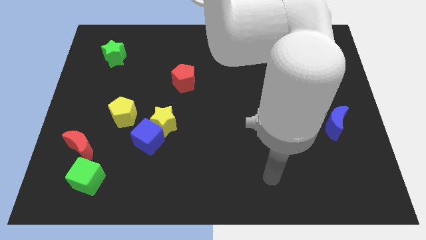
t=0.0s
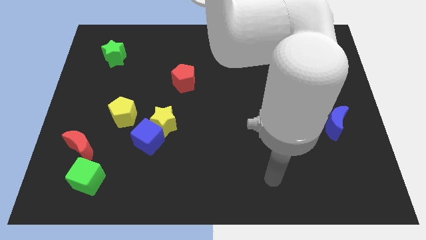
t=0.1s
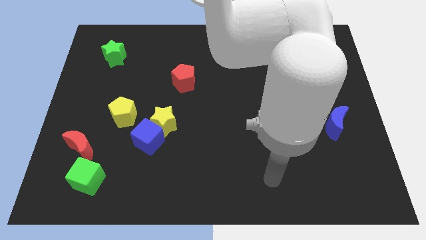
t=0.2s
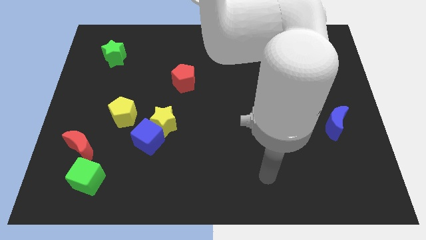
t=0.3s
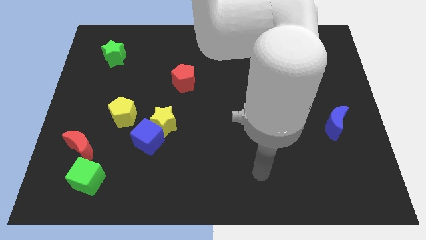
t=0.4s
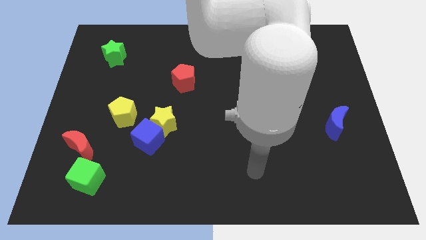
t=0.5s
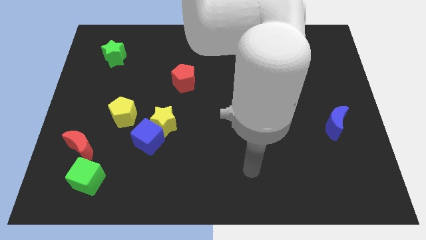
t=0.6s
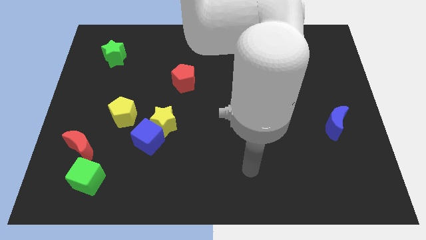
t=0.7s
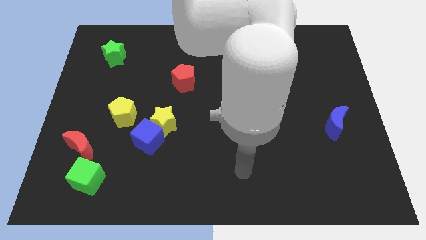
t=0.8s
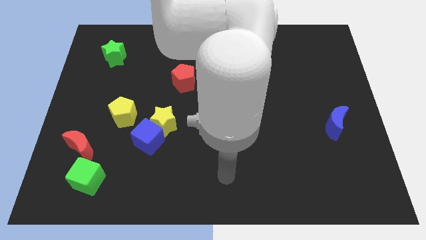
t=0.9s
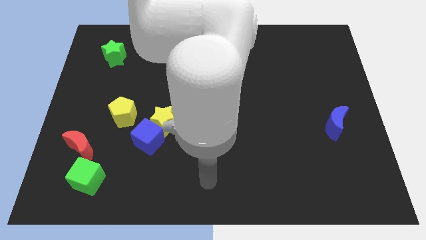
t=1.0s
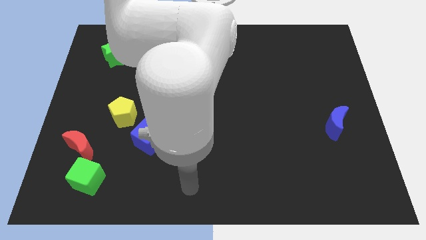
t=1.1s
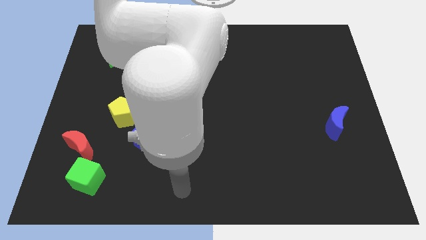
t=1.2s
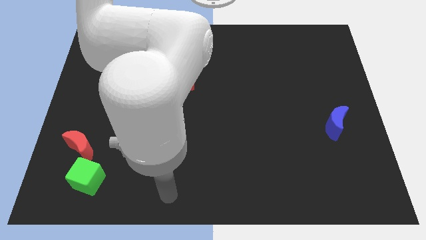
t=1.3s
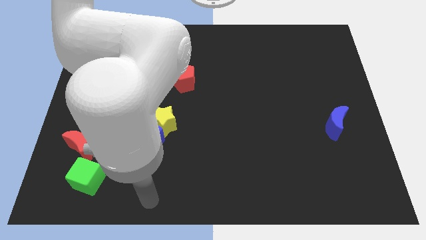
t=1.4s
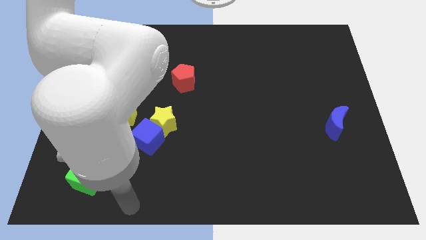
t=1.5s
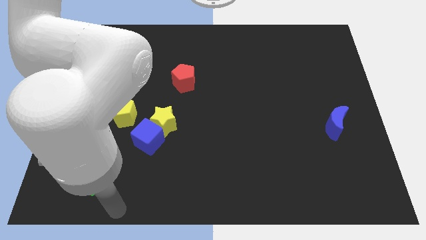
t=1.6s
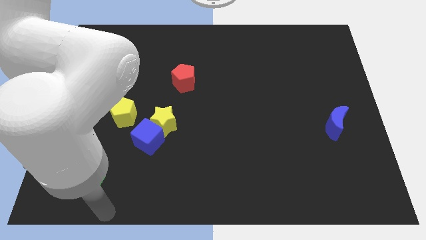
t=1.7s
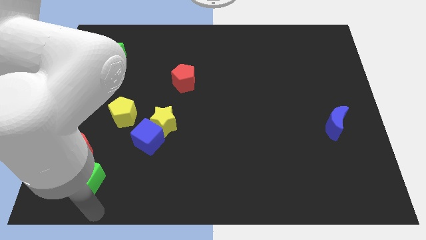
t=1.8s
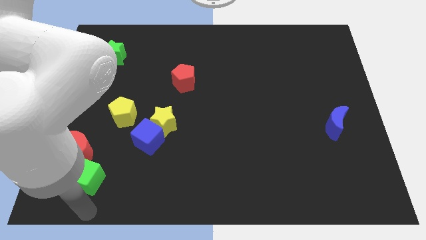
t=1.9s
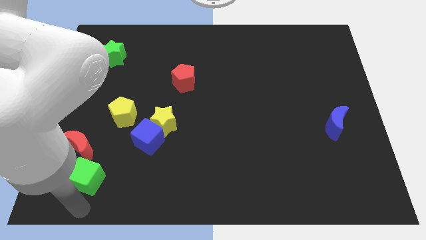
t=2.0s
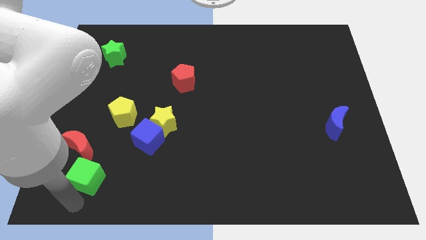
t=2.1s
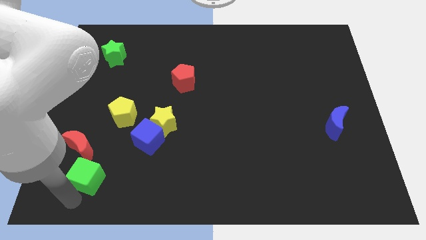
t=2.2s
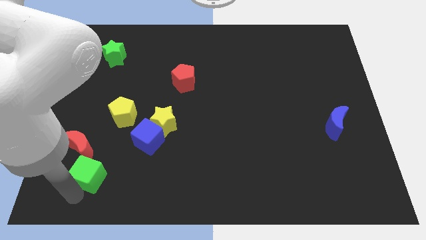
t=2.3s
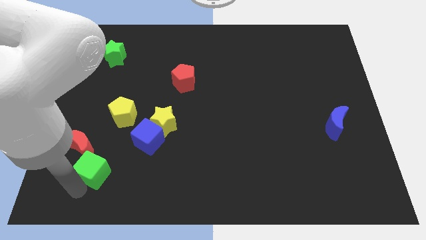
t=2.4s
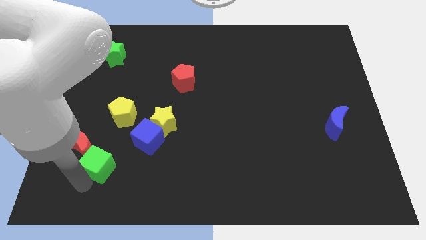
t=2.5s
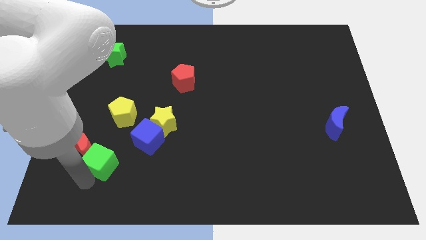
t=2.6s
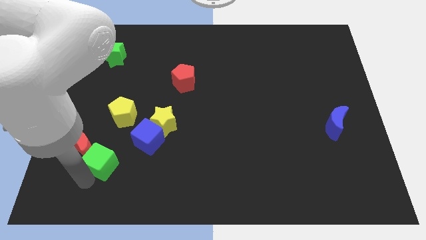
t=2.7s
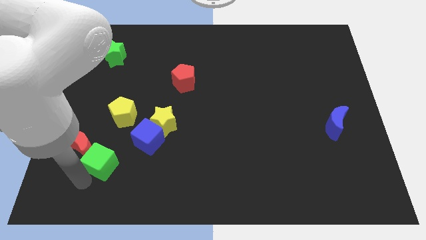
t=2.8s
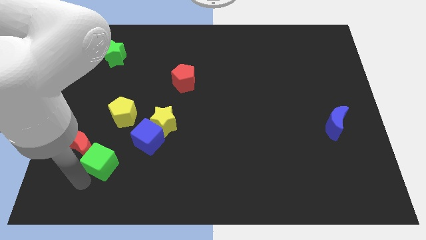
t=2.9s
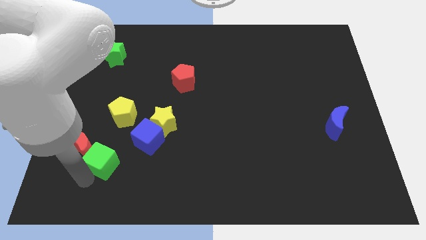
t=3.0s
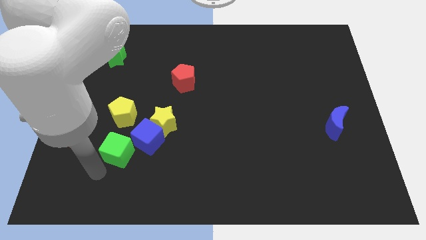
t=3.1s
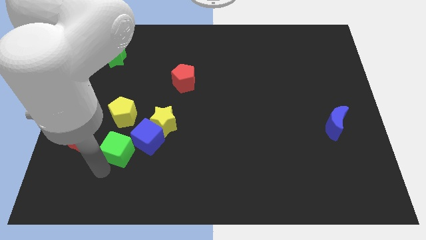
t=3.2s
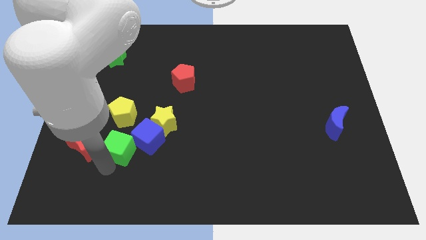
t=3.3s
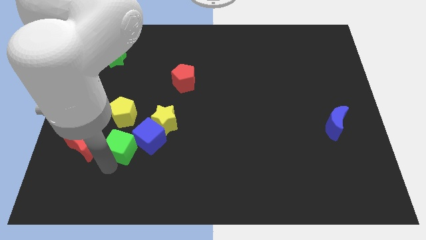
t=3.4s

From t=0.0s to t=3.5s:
move green cube into blue cube

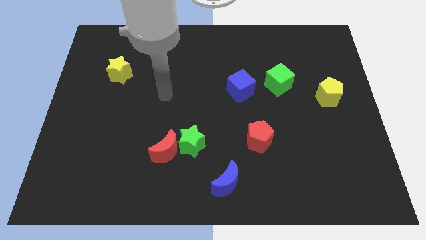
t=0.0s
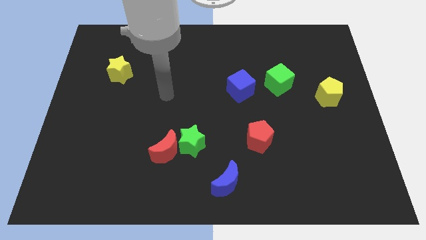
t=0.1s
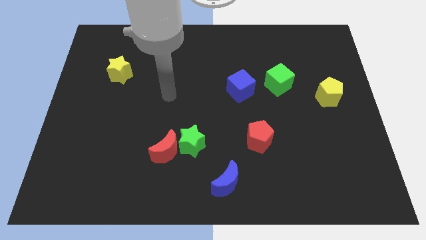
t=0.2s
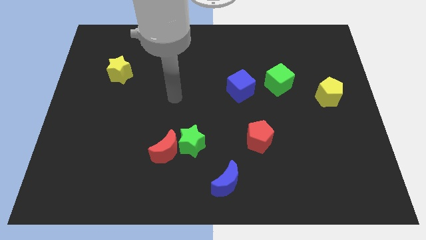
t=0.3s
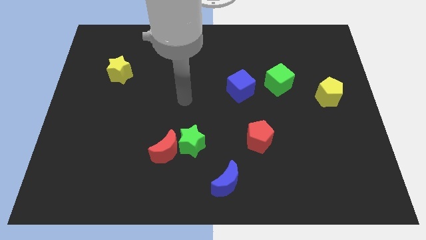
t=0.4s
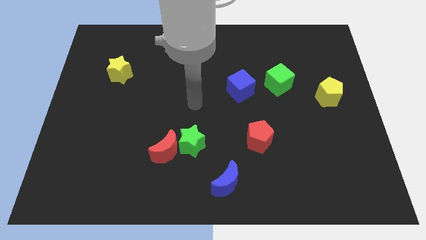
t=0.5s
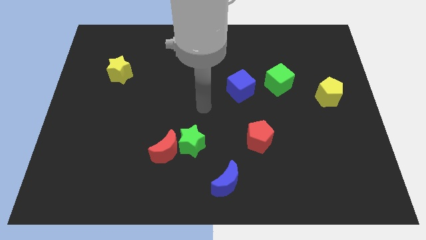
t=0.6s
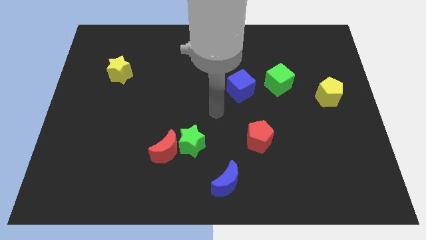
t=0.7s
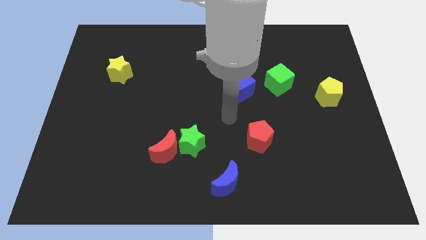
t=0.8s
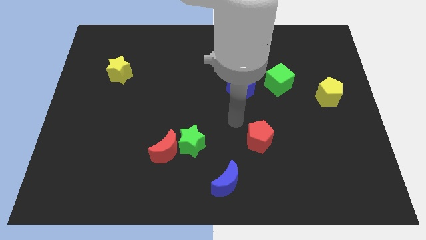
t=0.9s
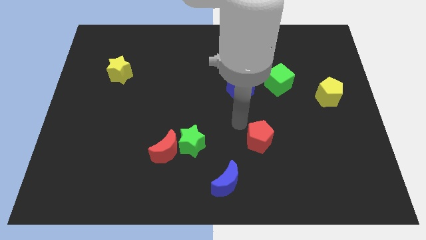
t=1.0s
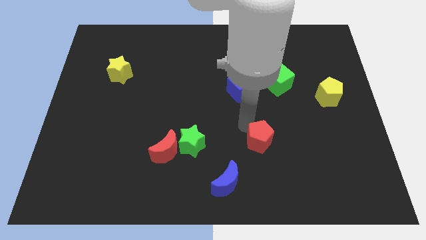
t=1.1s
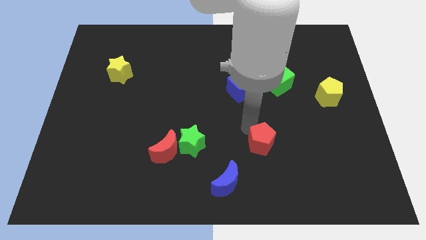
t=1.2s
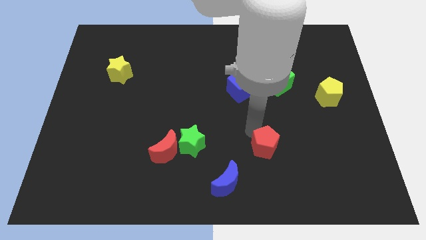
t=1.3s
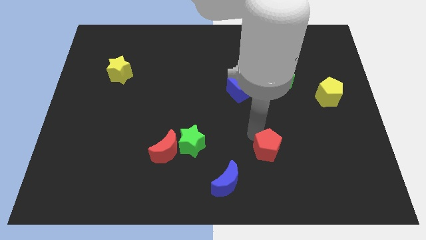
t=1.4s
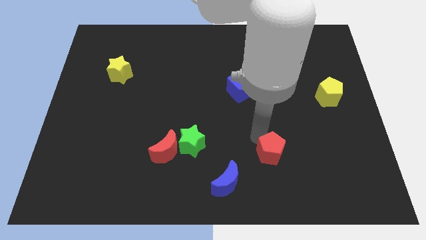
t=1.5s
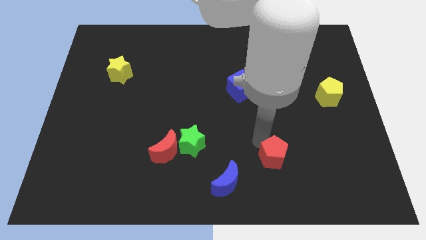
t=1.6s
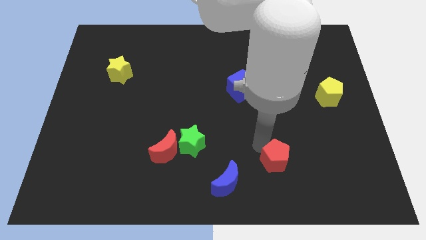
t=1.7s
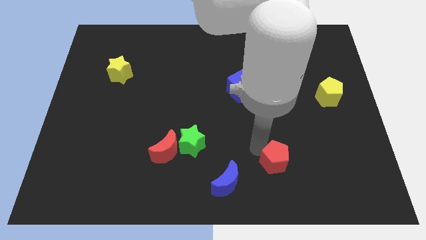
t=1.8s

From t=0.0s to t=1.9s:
push the red pentagon to the bottom center of the board

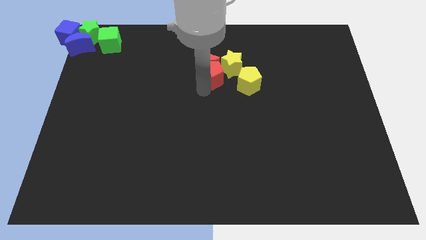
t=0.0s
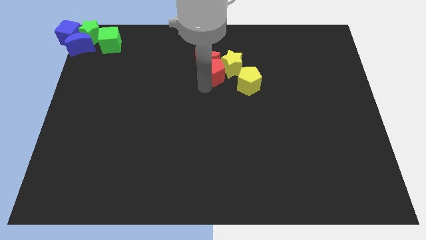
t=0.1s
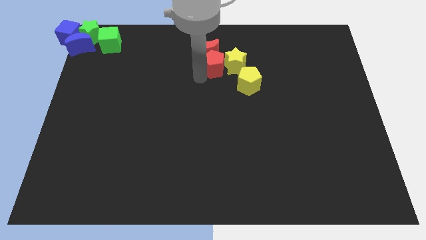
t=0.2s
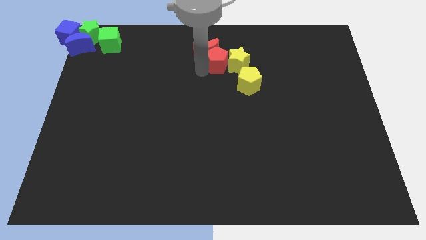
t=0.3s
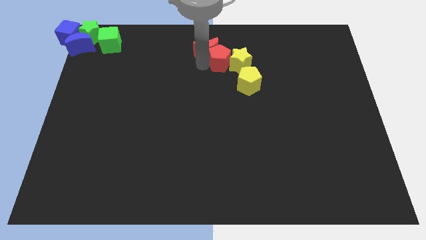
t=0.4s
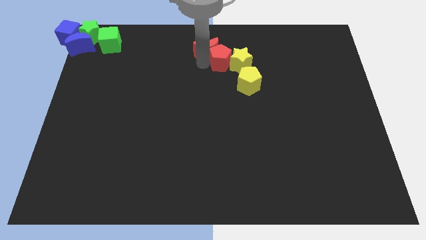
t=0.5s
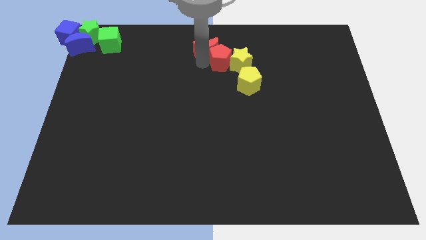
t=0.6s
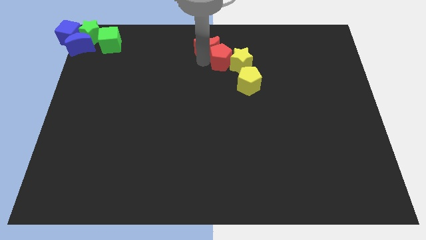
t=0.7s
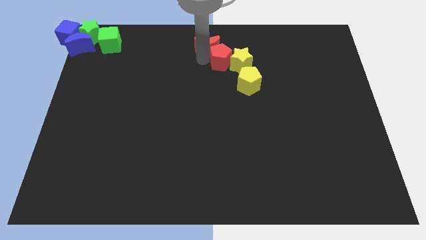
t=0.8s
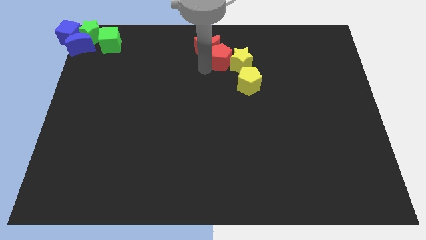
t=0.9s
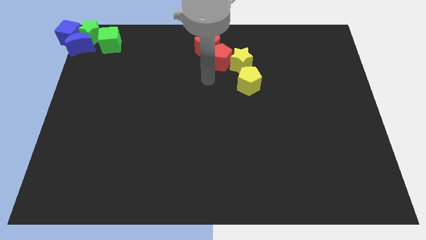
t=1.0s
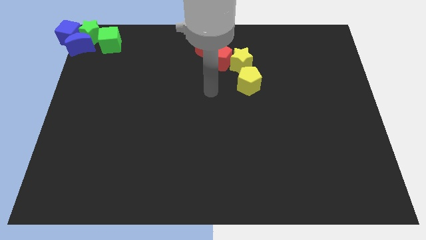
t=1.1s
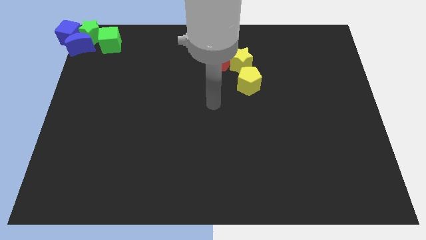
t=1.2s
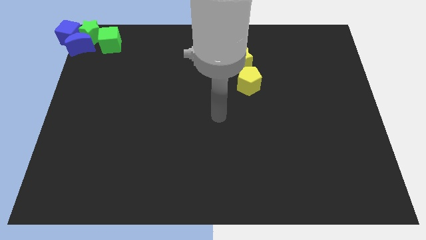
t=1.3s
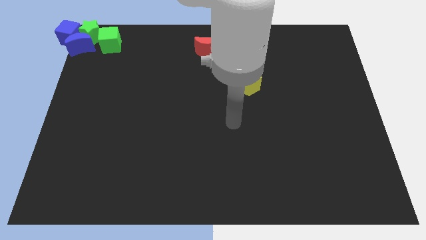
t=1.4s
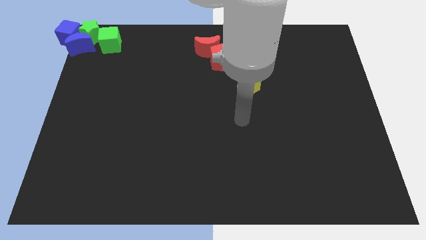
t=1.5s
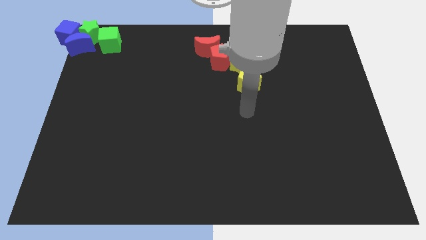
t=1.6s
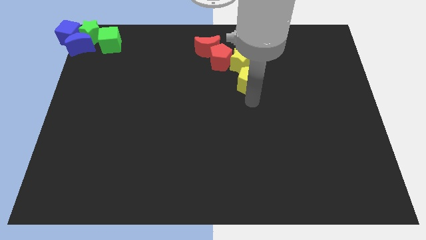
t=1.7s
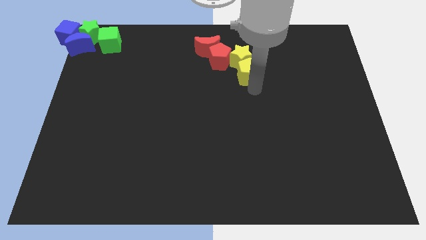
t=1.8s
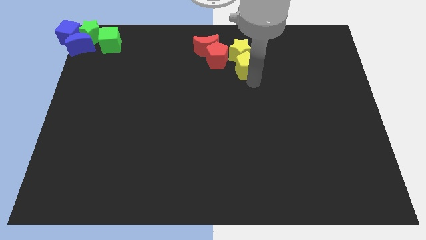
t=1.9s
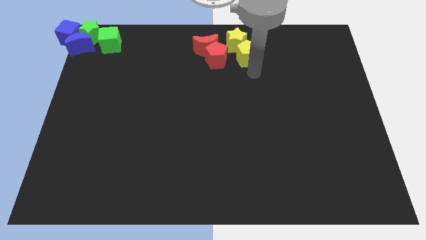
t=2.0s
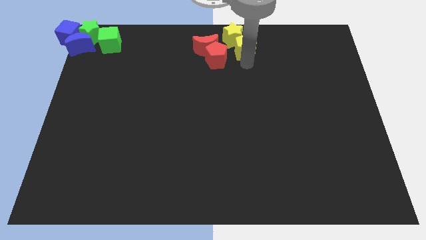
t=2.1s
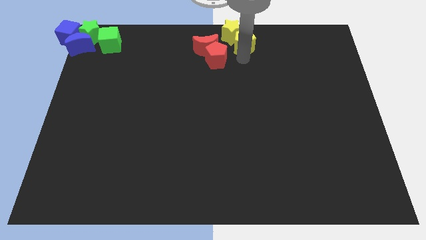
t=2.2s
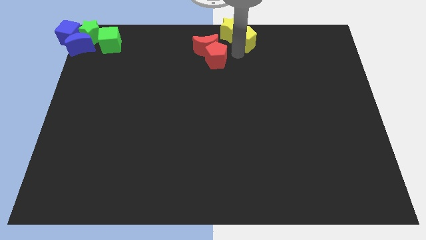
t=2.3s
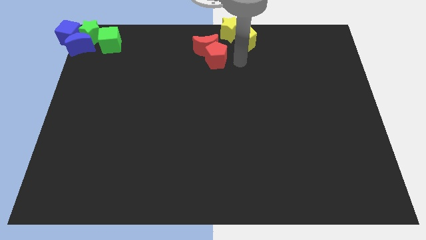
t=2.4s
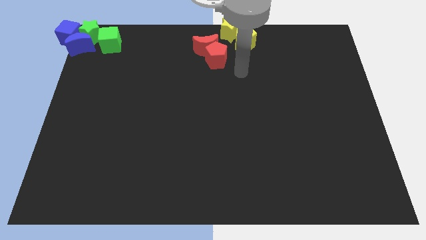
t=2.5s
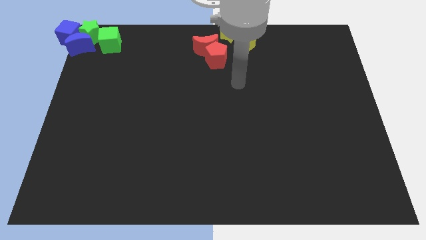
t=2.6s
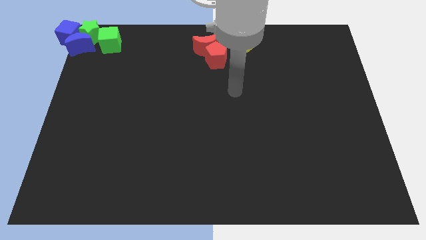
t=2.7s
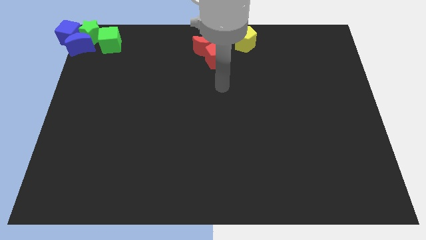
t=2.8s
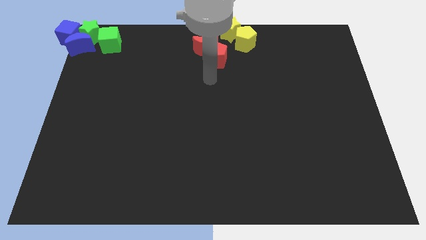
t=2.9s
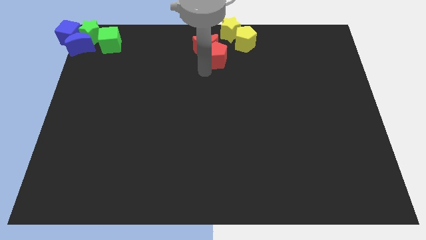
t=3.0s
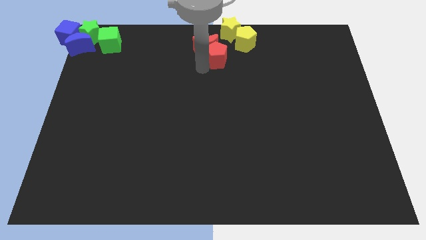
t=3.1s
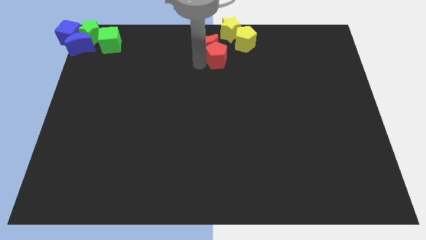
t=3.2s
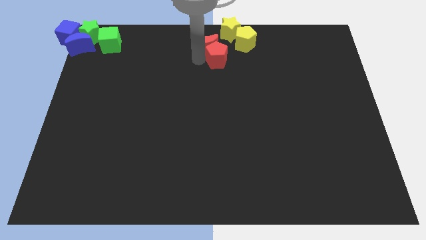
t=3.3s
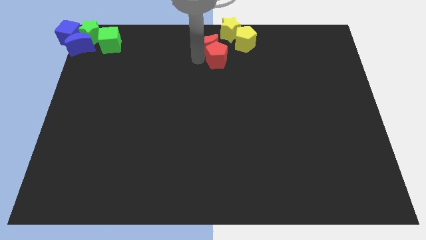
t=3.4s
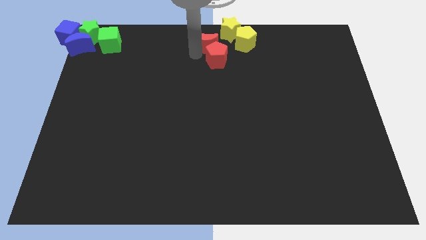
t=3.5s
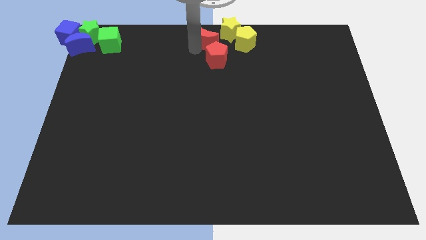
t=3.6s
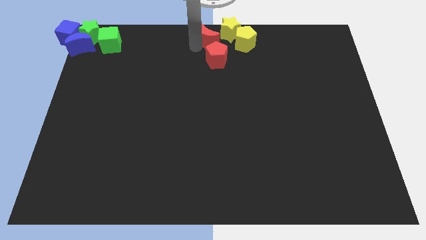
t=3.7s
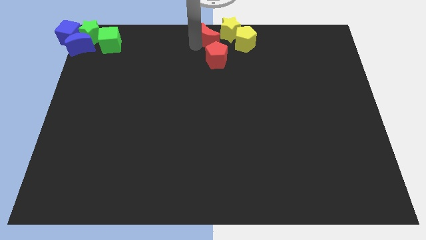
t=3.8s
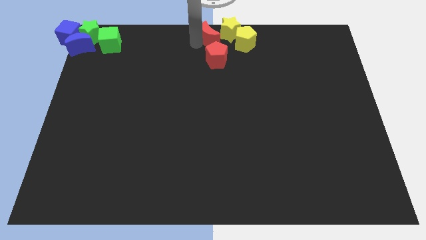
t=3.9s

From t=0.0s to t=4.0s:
place the red and yellow blocks at the top center
